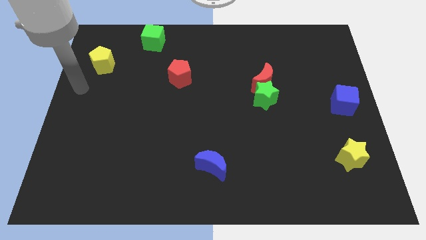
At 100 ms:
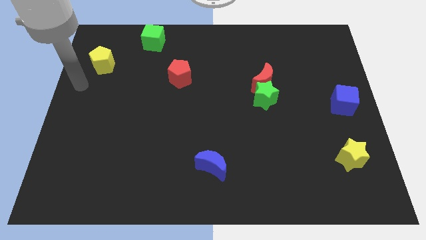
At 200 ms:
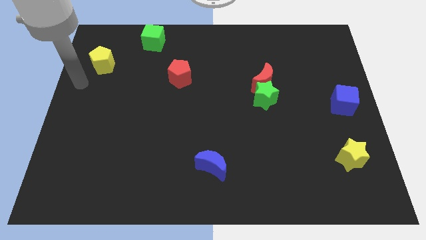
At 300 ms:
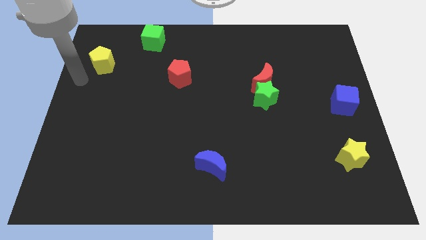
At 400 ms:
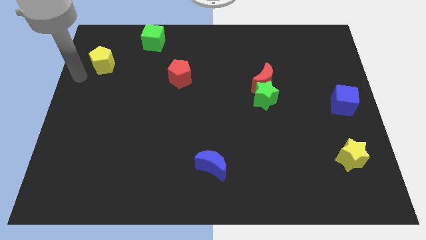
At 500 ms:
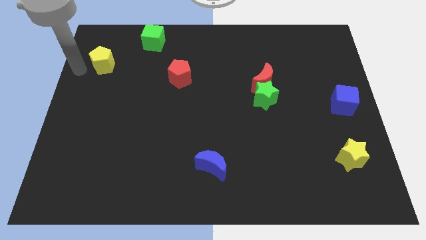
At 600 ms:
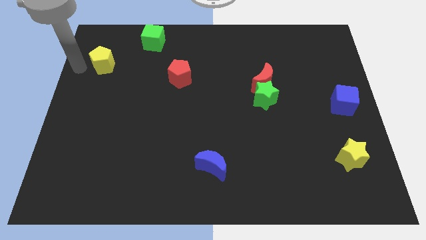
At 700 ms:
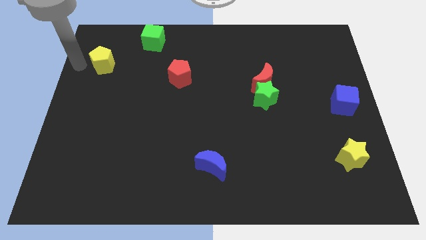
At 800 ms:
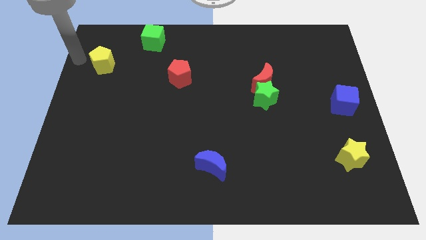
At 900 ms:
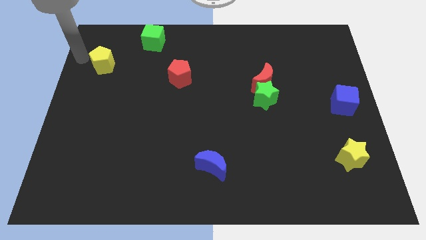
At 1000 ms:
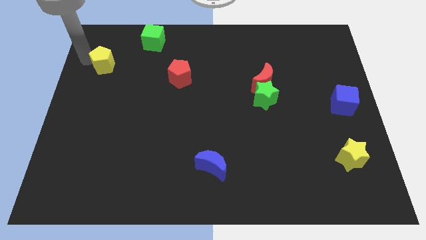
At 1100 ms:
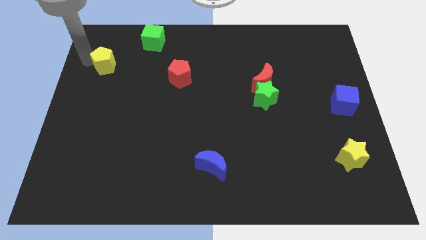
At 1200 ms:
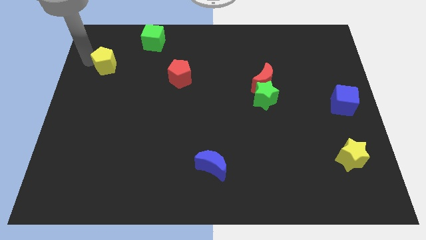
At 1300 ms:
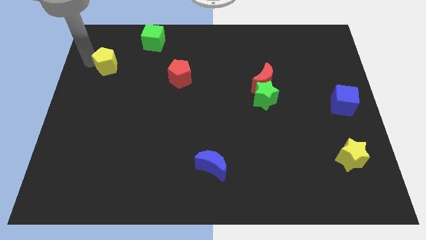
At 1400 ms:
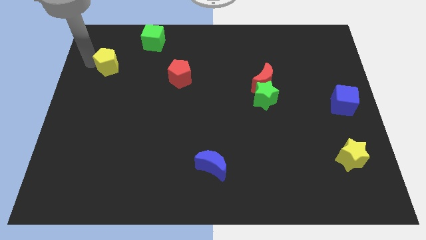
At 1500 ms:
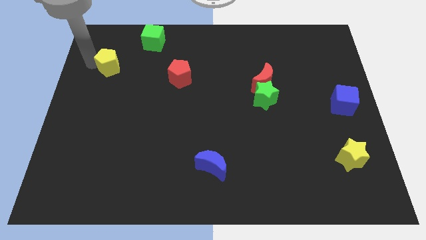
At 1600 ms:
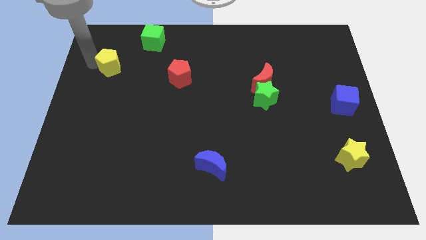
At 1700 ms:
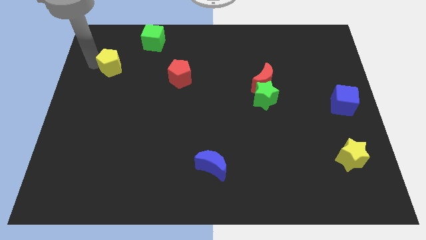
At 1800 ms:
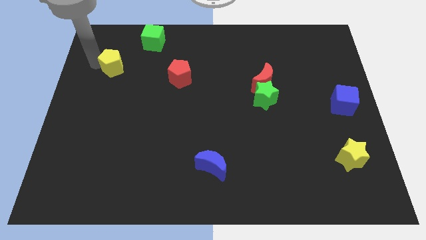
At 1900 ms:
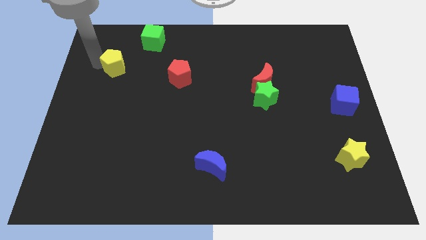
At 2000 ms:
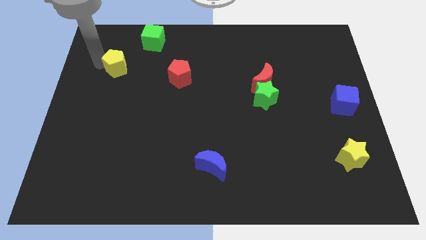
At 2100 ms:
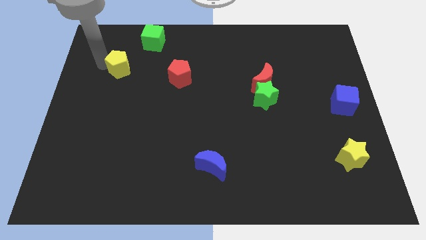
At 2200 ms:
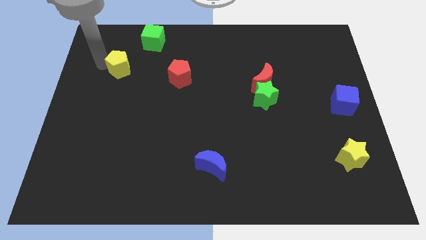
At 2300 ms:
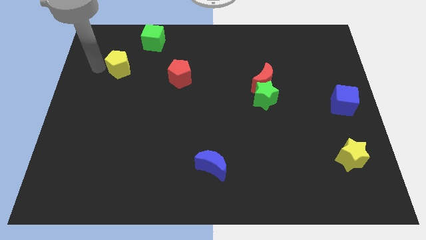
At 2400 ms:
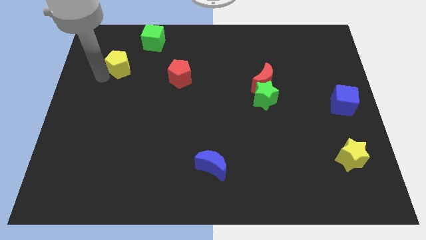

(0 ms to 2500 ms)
slightly move the yellow pentagon to the right

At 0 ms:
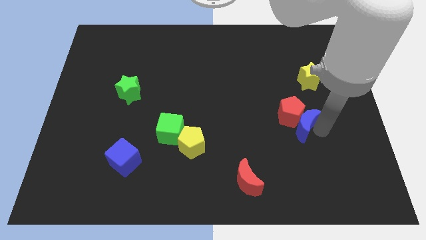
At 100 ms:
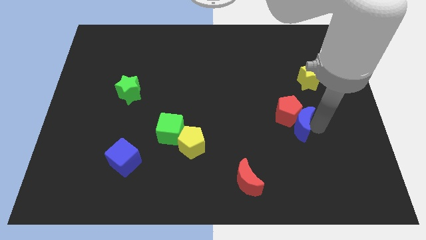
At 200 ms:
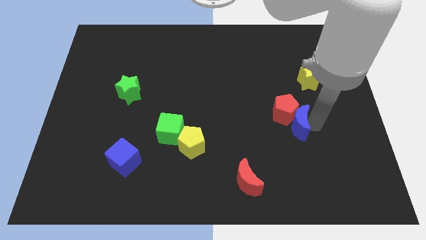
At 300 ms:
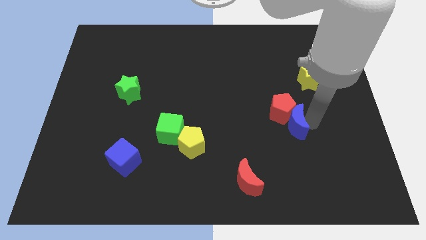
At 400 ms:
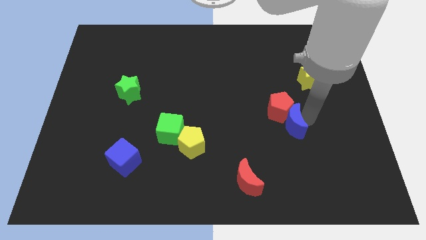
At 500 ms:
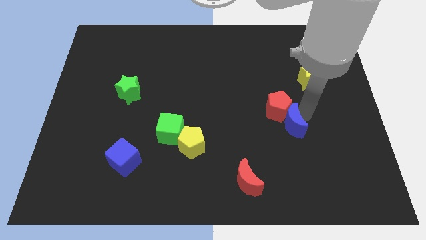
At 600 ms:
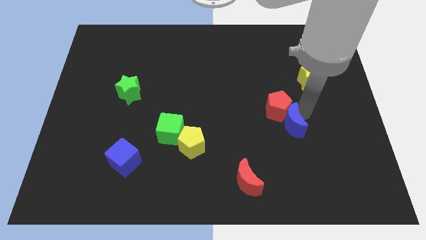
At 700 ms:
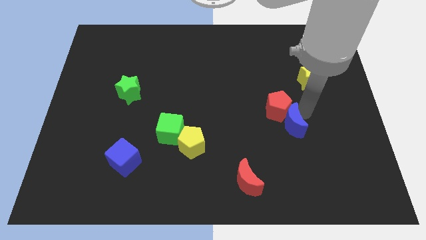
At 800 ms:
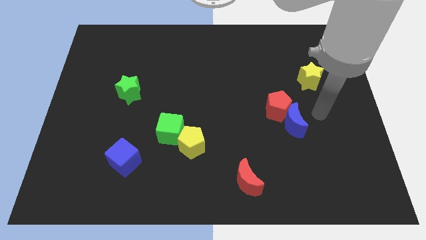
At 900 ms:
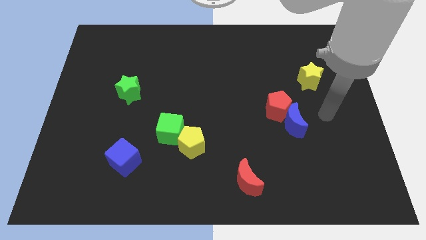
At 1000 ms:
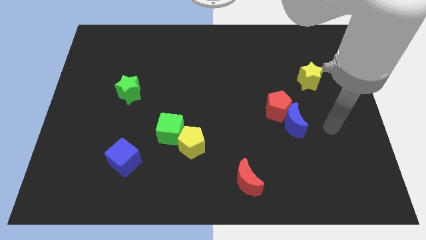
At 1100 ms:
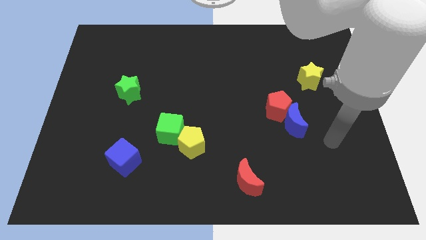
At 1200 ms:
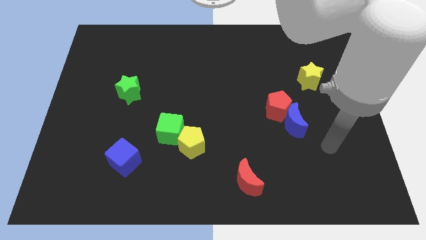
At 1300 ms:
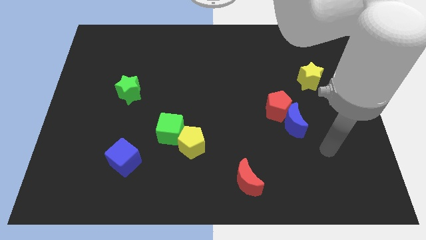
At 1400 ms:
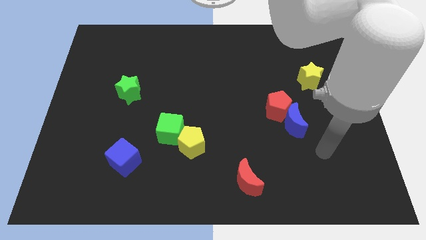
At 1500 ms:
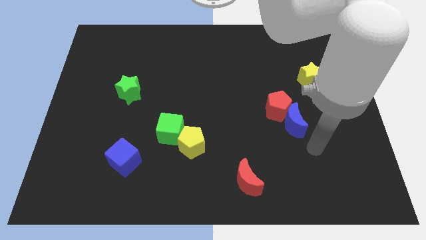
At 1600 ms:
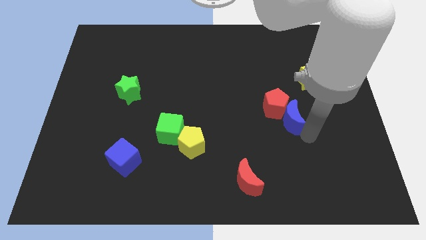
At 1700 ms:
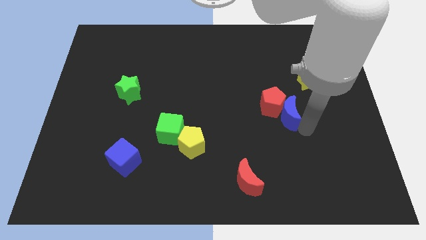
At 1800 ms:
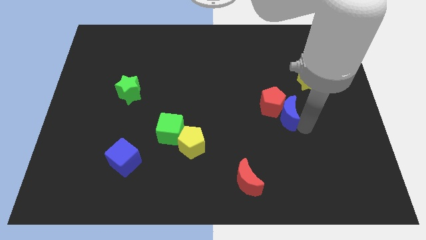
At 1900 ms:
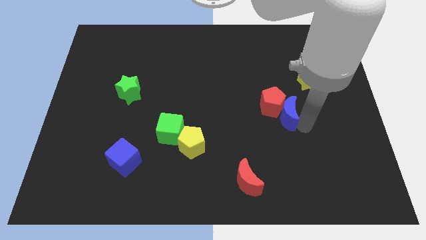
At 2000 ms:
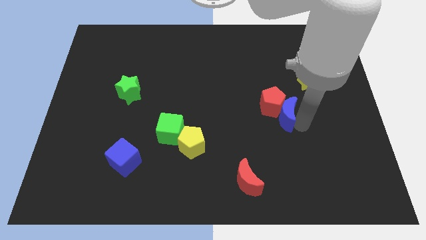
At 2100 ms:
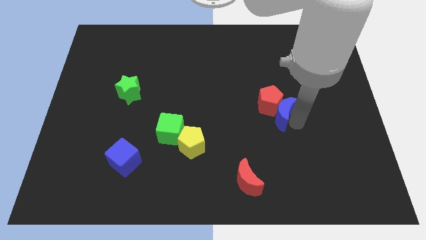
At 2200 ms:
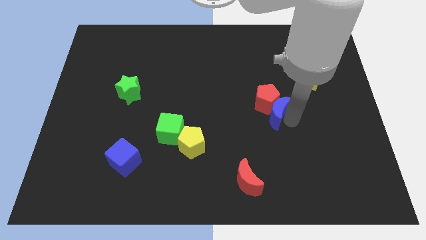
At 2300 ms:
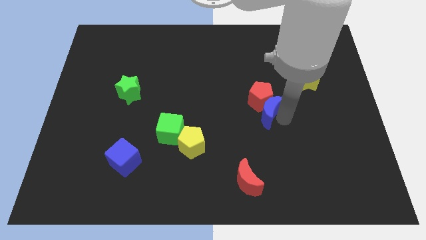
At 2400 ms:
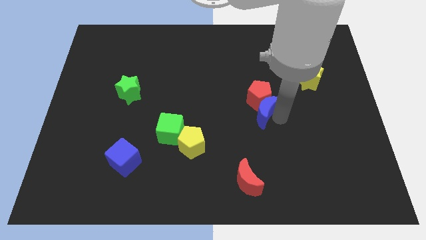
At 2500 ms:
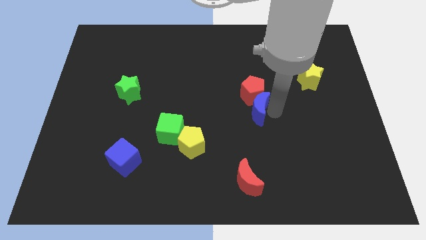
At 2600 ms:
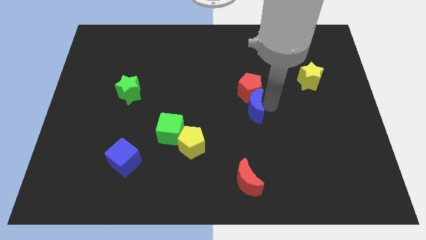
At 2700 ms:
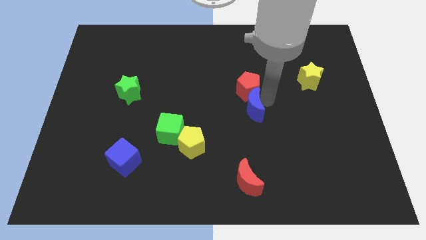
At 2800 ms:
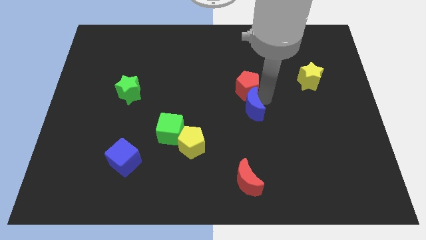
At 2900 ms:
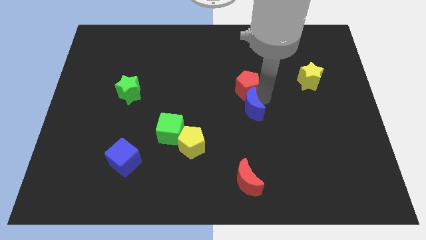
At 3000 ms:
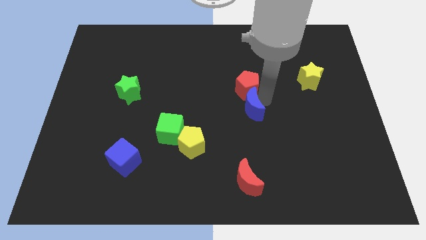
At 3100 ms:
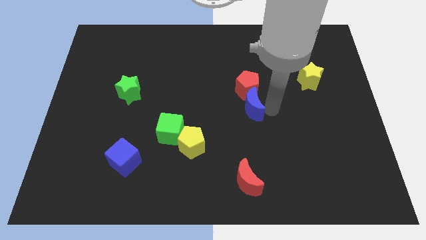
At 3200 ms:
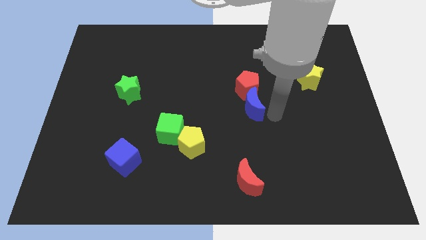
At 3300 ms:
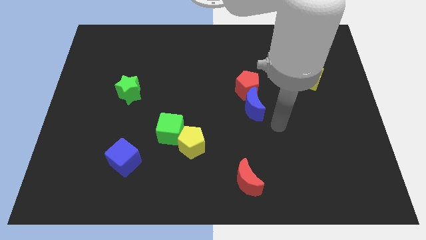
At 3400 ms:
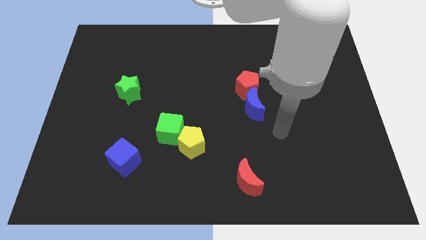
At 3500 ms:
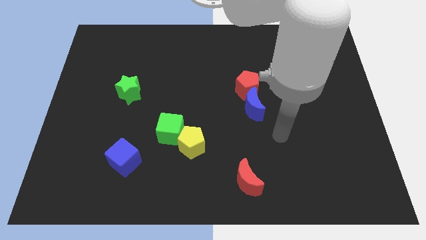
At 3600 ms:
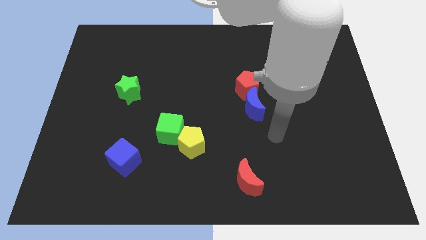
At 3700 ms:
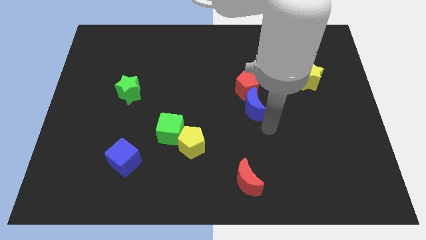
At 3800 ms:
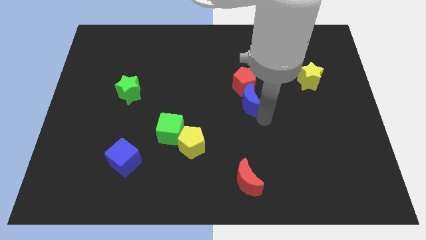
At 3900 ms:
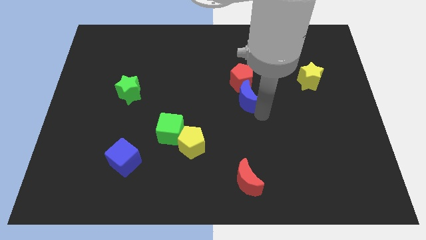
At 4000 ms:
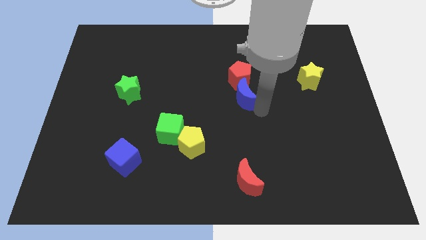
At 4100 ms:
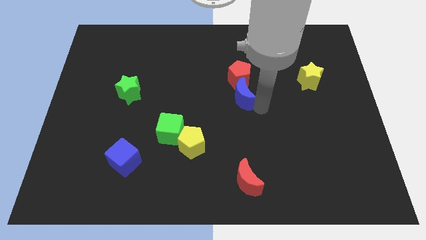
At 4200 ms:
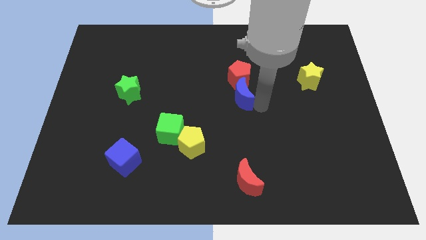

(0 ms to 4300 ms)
push the blue crescent along with the red pentagon towards the top center

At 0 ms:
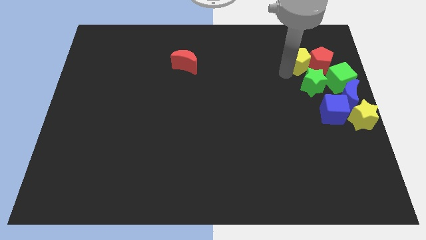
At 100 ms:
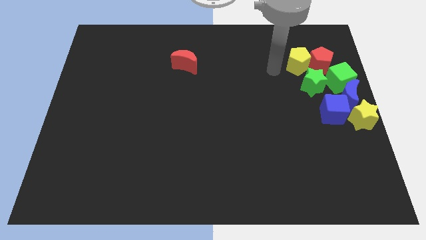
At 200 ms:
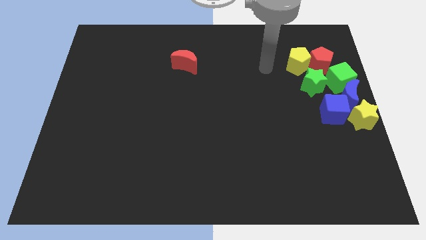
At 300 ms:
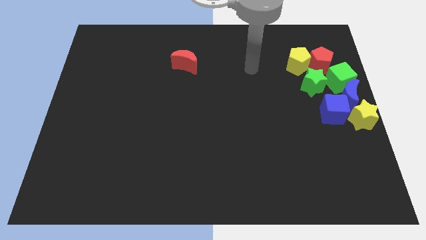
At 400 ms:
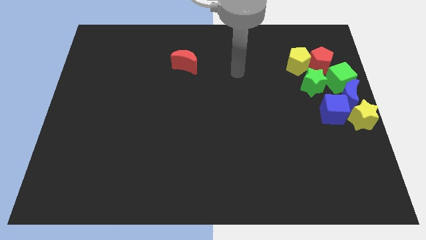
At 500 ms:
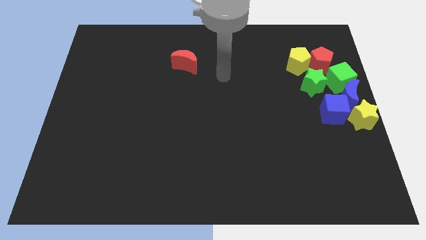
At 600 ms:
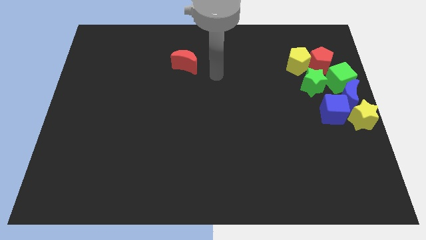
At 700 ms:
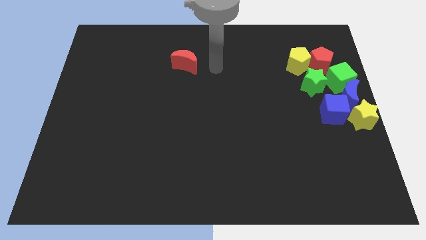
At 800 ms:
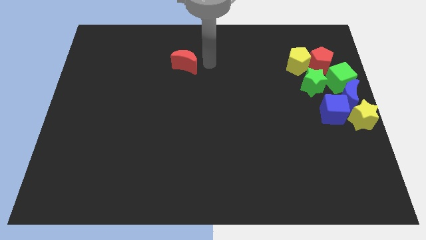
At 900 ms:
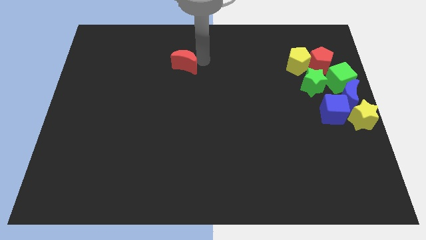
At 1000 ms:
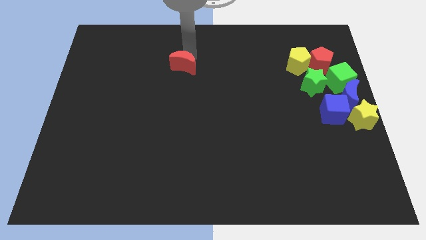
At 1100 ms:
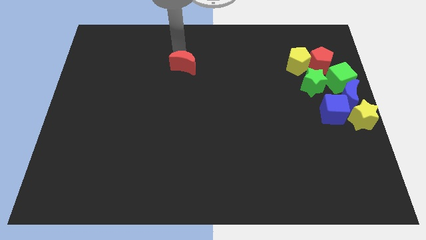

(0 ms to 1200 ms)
move your arm to the red moon

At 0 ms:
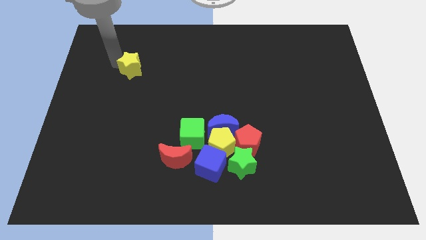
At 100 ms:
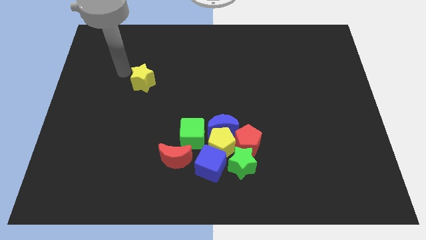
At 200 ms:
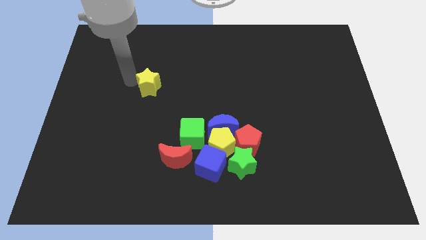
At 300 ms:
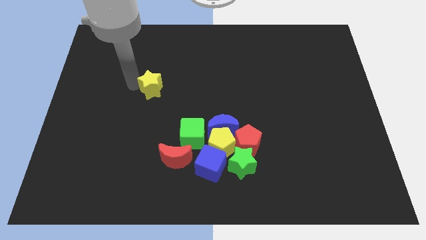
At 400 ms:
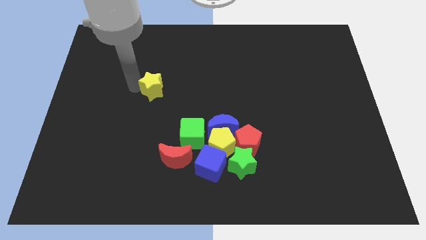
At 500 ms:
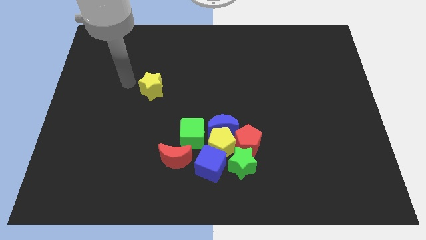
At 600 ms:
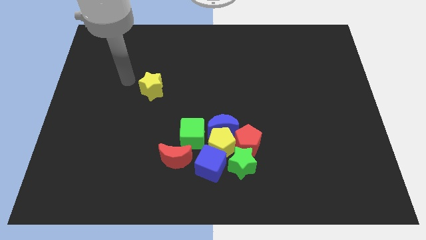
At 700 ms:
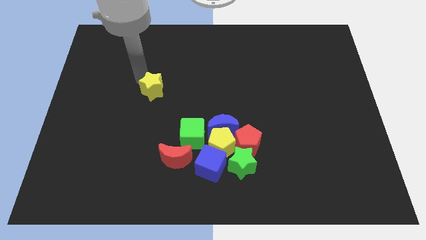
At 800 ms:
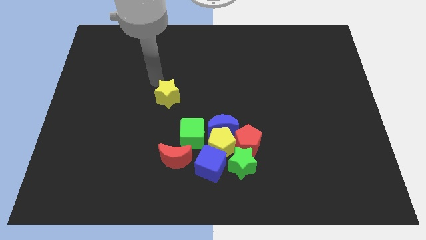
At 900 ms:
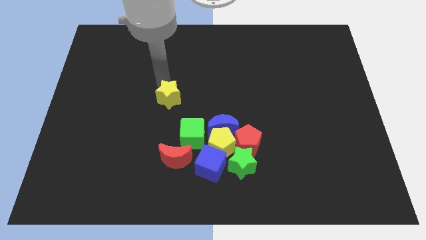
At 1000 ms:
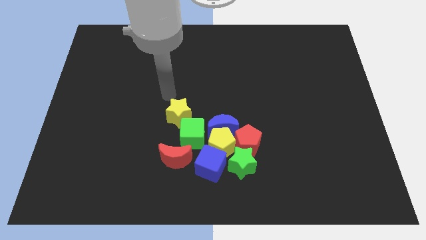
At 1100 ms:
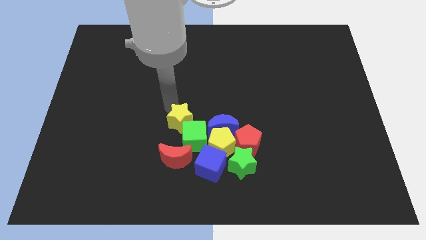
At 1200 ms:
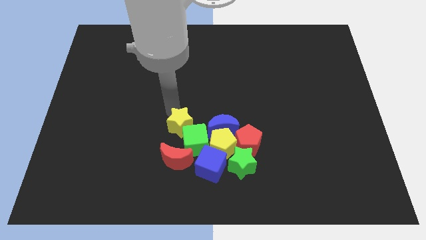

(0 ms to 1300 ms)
push the yellow star to the top left side of the green cube
